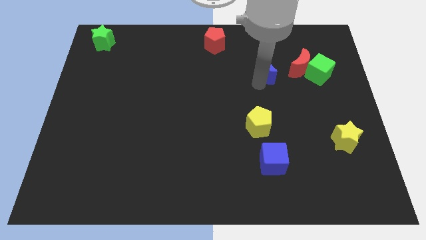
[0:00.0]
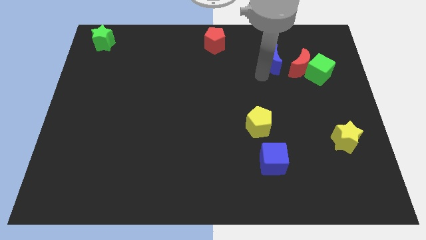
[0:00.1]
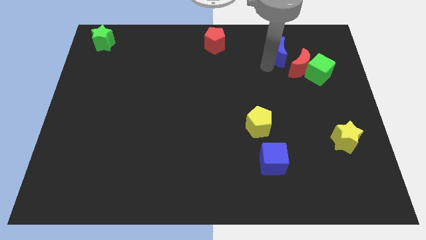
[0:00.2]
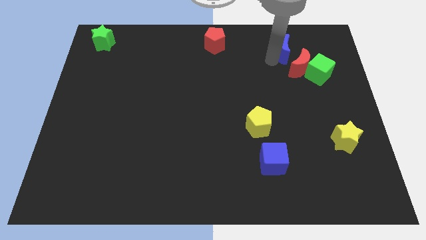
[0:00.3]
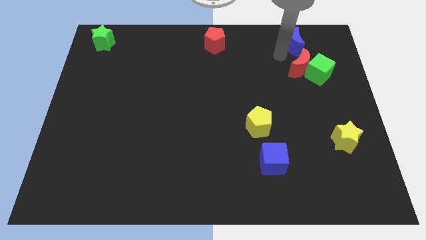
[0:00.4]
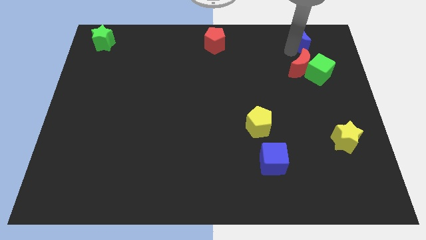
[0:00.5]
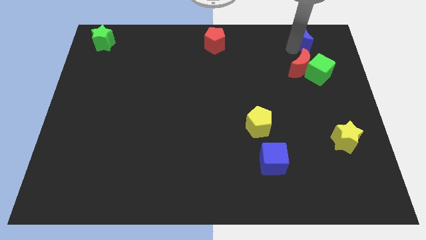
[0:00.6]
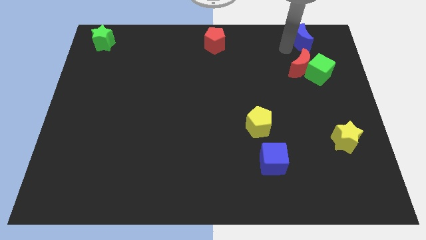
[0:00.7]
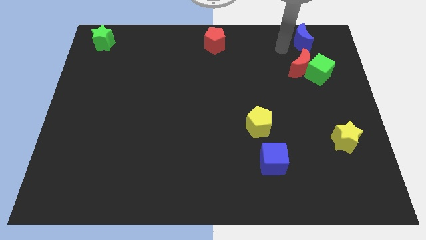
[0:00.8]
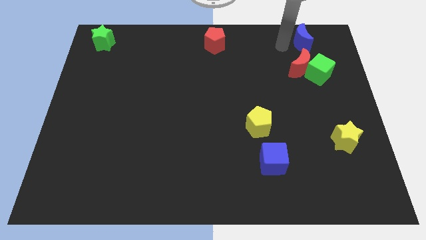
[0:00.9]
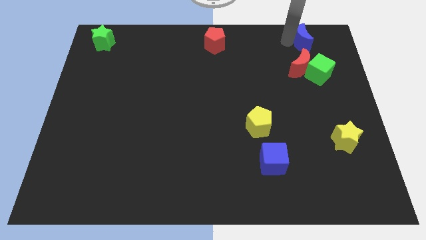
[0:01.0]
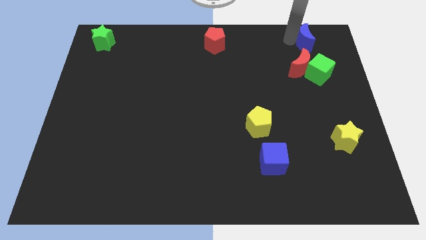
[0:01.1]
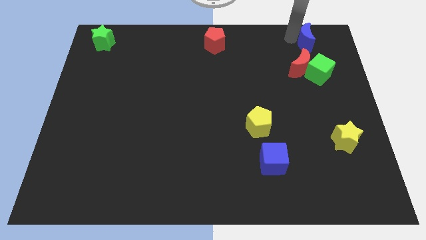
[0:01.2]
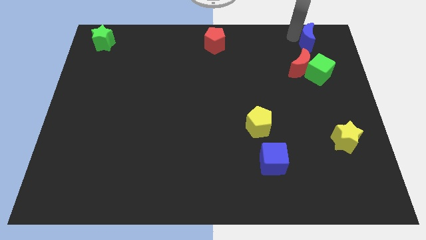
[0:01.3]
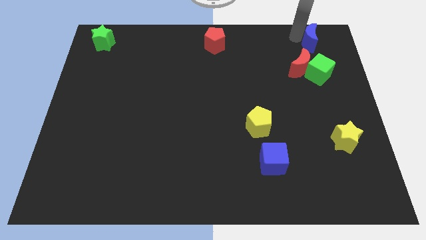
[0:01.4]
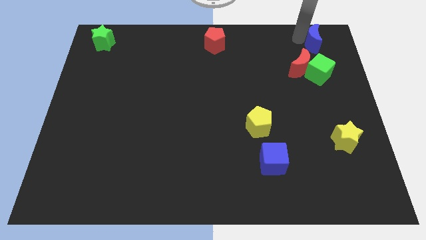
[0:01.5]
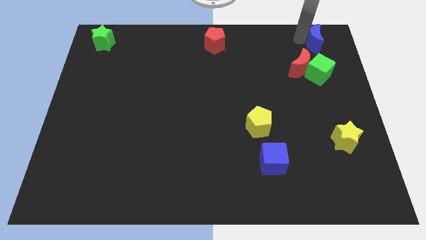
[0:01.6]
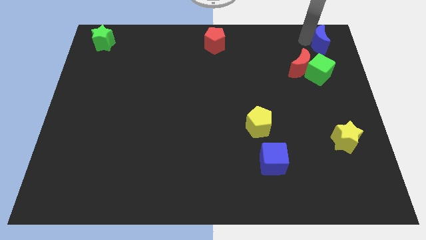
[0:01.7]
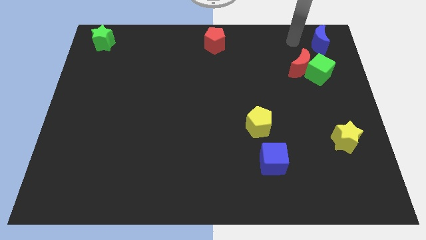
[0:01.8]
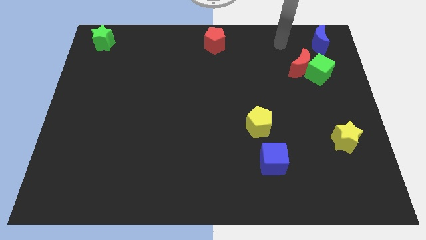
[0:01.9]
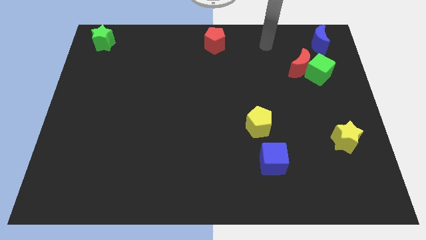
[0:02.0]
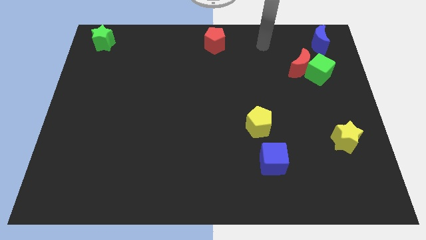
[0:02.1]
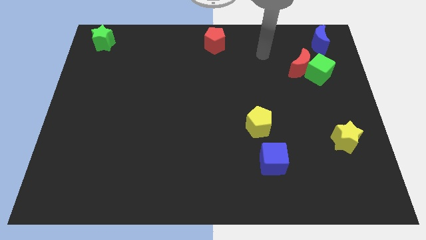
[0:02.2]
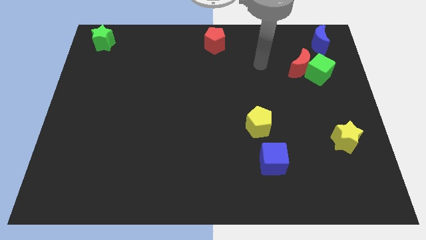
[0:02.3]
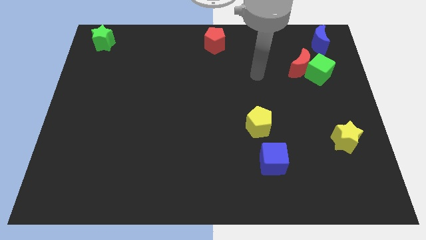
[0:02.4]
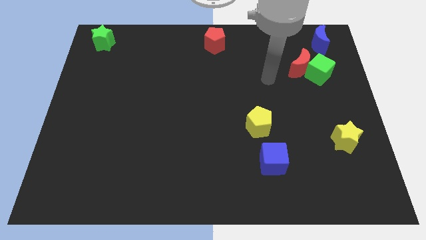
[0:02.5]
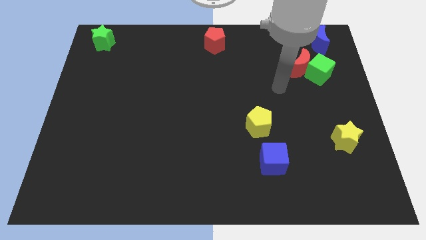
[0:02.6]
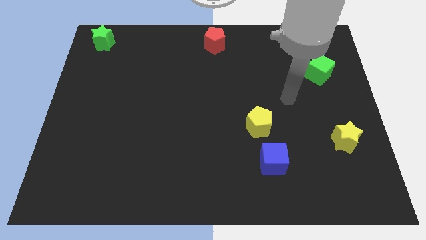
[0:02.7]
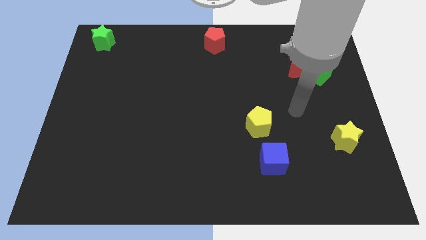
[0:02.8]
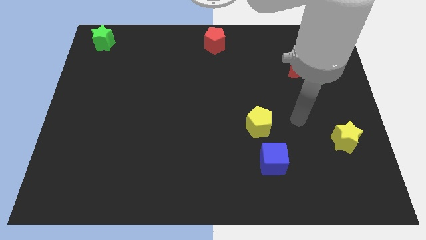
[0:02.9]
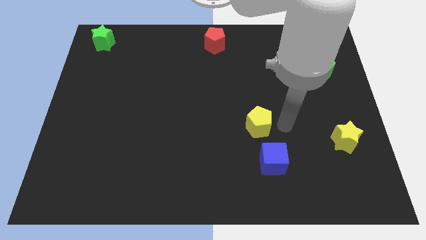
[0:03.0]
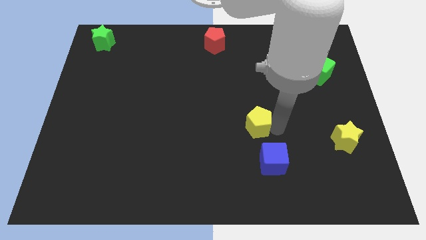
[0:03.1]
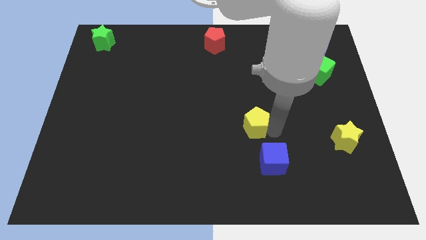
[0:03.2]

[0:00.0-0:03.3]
put the blue crescent above the green cube

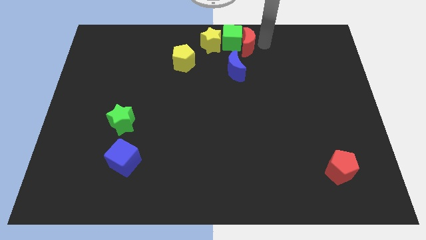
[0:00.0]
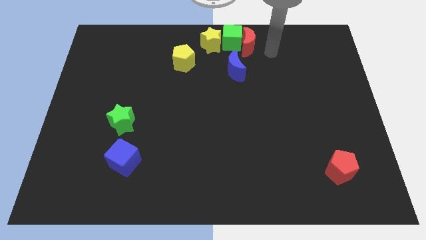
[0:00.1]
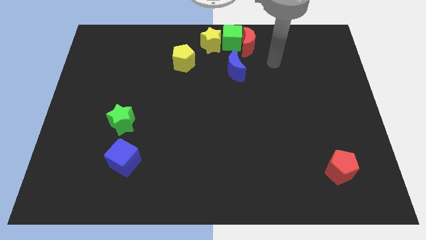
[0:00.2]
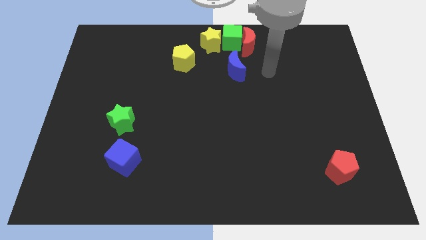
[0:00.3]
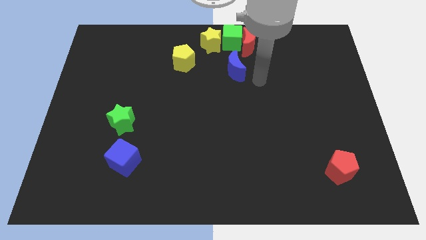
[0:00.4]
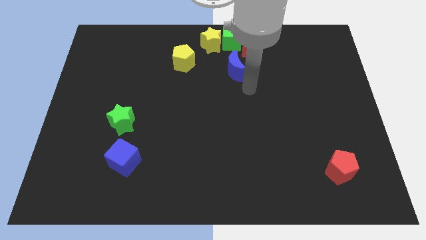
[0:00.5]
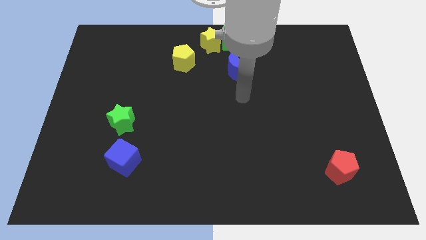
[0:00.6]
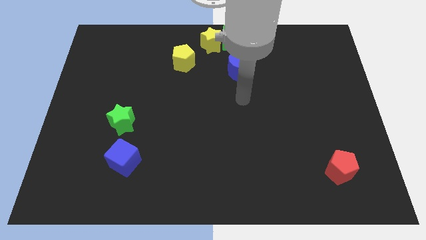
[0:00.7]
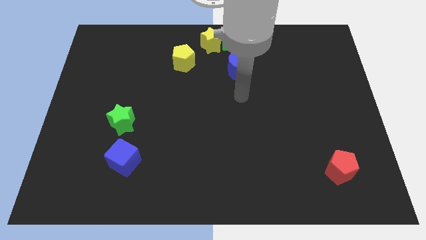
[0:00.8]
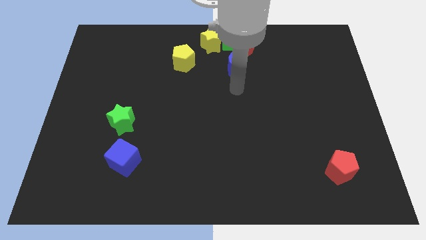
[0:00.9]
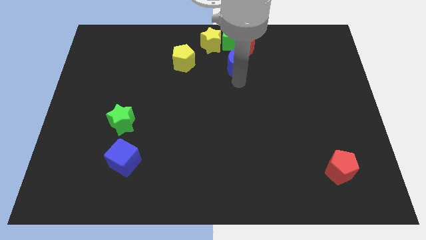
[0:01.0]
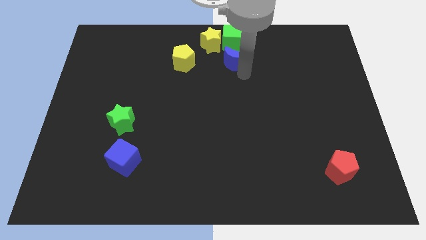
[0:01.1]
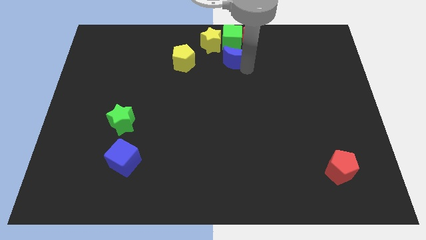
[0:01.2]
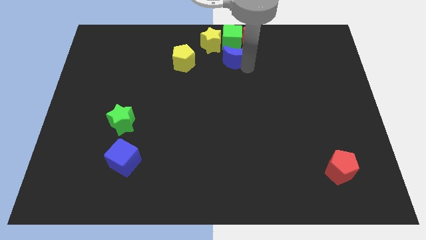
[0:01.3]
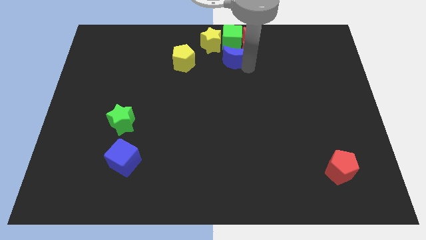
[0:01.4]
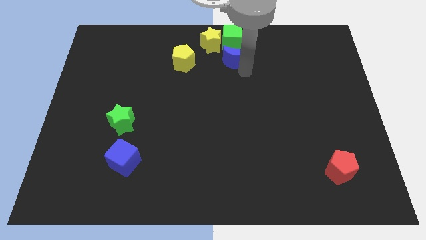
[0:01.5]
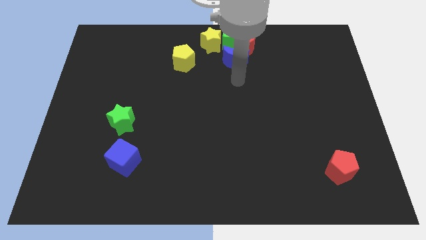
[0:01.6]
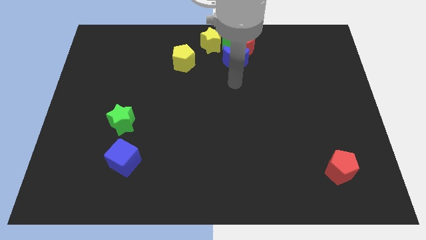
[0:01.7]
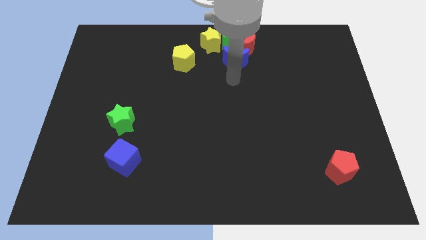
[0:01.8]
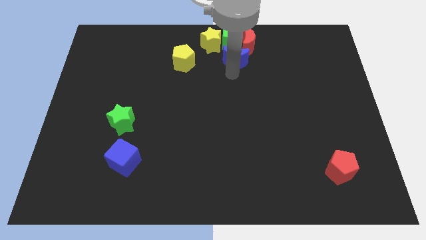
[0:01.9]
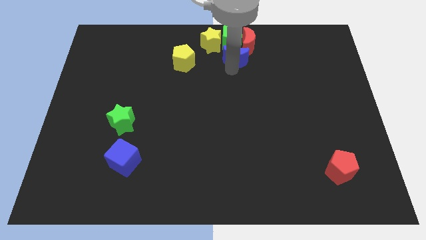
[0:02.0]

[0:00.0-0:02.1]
move the blue moon to the bottom side of the green cube and red moon

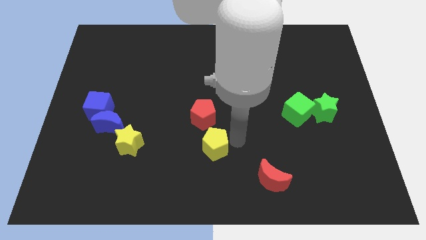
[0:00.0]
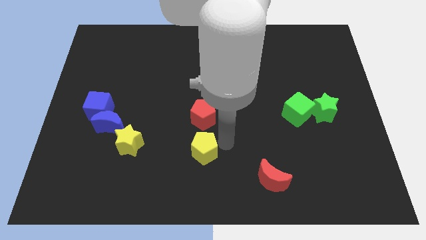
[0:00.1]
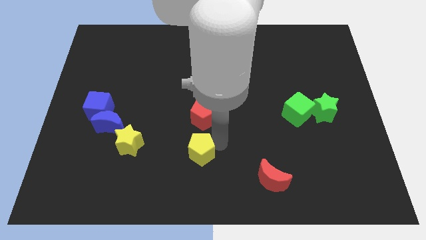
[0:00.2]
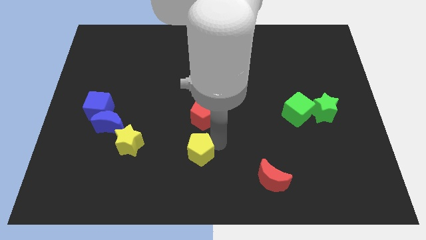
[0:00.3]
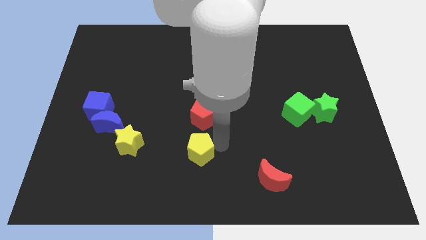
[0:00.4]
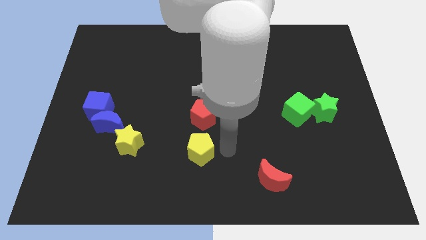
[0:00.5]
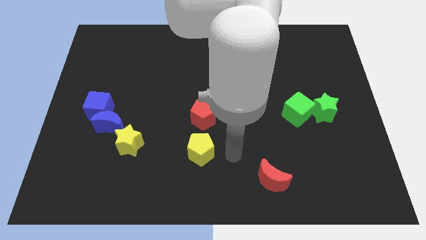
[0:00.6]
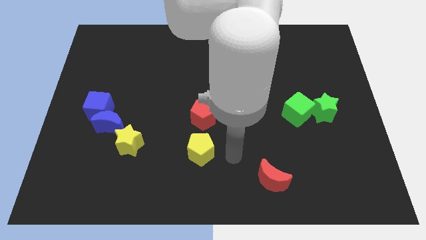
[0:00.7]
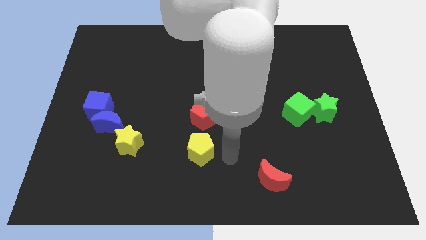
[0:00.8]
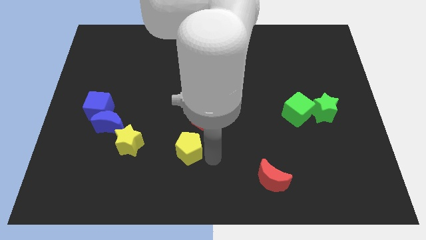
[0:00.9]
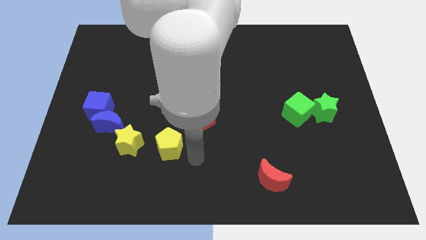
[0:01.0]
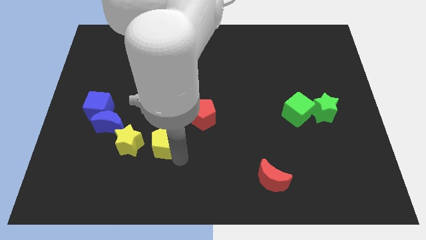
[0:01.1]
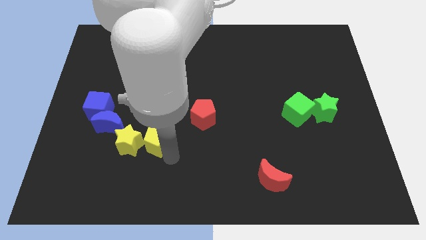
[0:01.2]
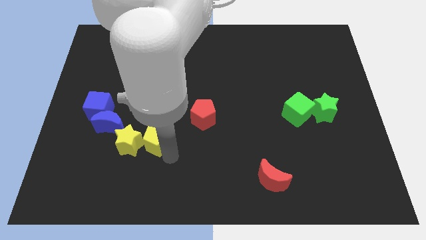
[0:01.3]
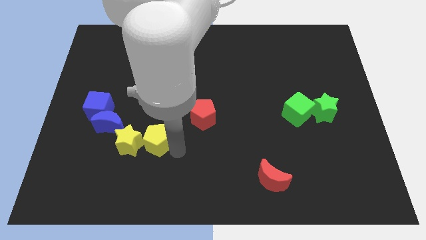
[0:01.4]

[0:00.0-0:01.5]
move yellow pentagon into the yellow star

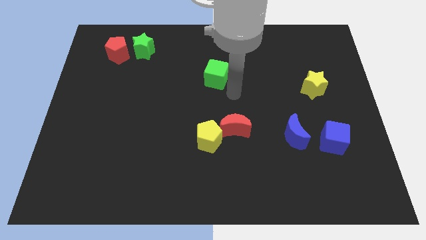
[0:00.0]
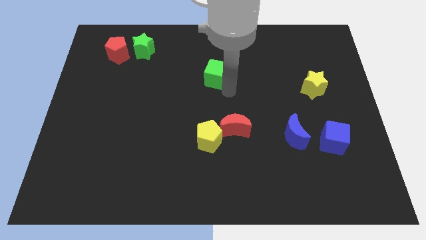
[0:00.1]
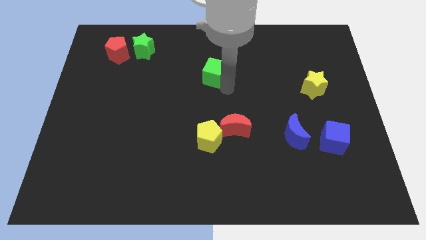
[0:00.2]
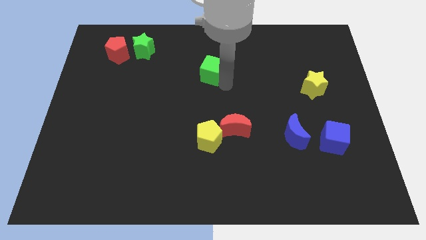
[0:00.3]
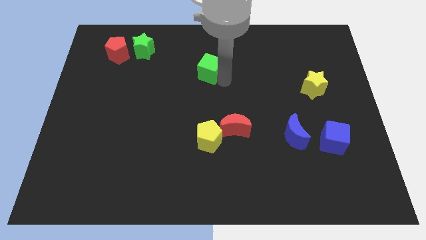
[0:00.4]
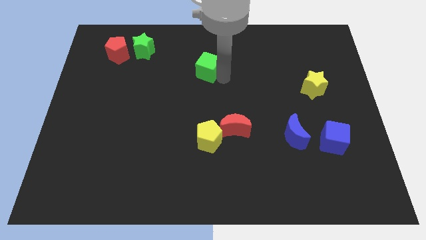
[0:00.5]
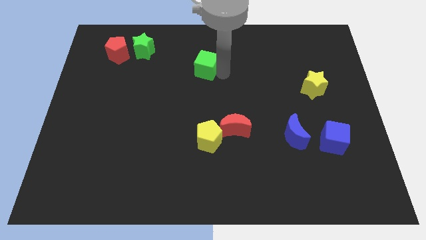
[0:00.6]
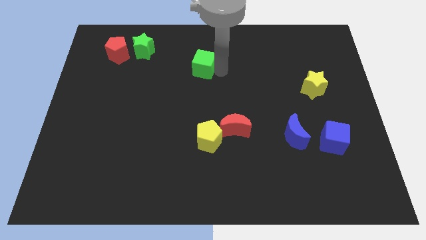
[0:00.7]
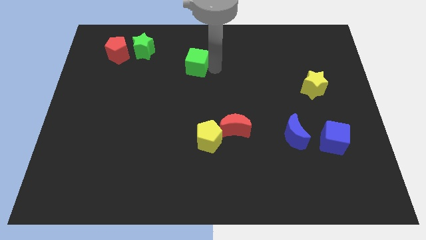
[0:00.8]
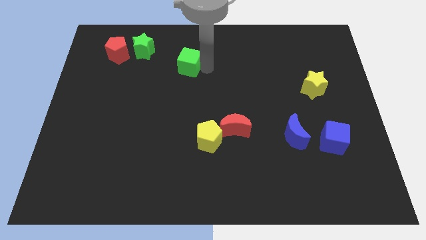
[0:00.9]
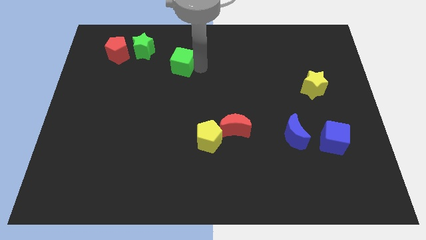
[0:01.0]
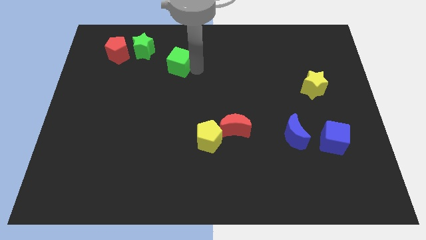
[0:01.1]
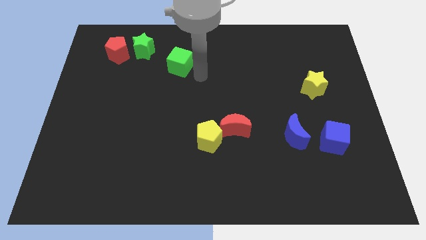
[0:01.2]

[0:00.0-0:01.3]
push the green cube towards the green star

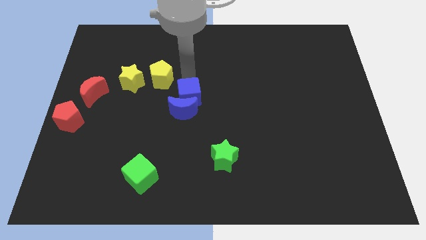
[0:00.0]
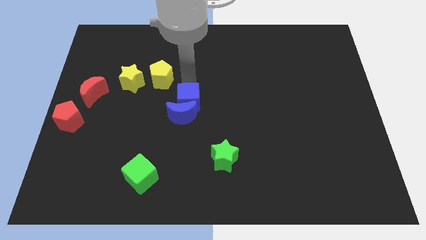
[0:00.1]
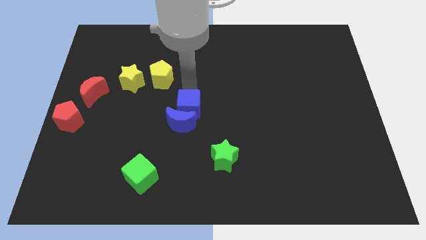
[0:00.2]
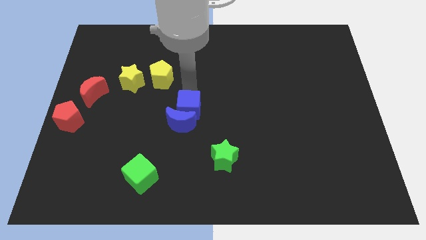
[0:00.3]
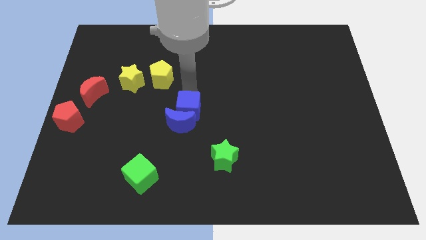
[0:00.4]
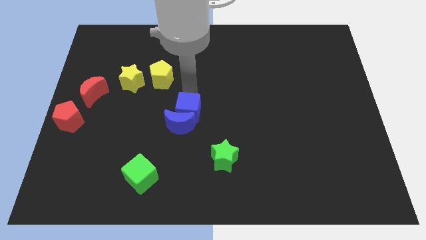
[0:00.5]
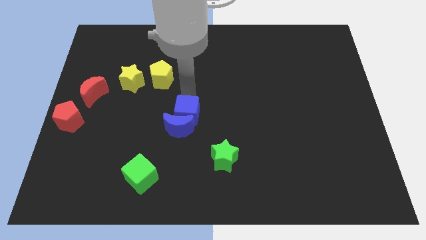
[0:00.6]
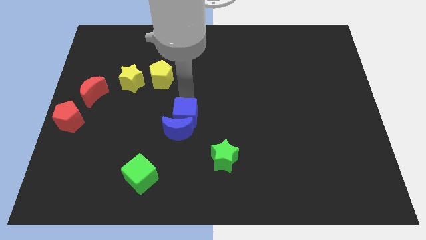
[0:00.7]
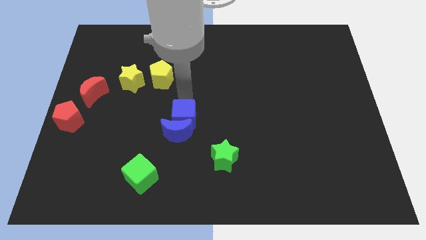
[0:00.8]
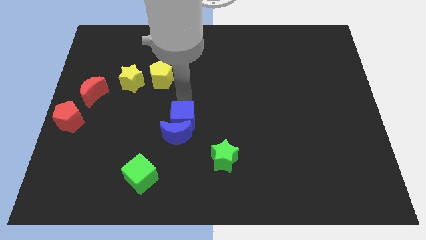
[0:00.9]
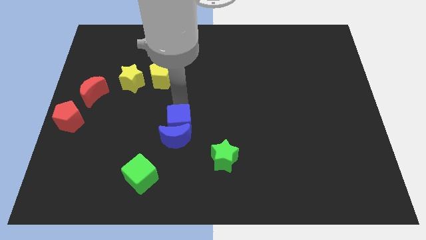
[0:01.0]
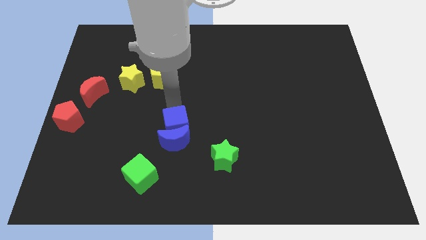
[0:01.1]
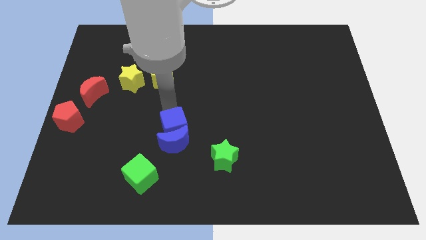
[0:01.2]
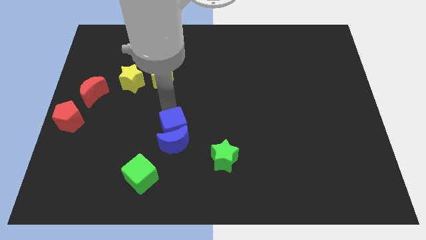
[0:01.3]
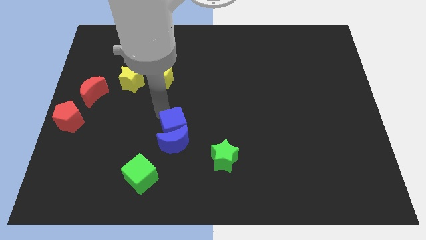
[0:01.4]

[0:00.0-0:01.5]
push the blue blocks slightly towards down
